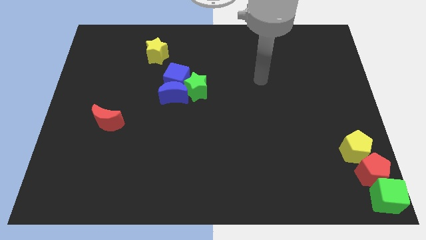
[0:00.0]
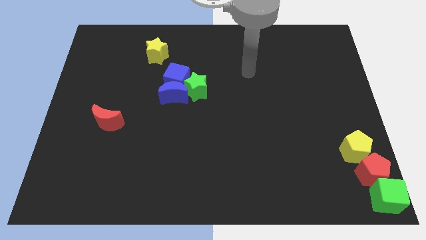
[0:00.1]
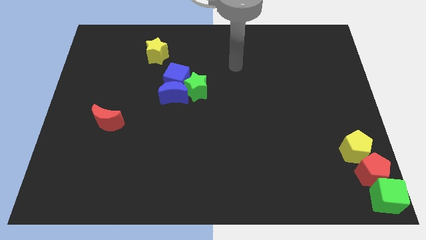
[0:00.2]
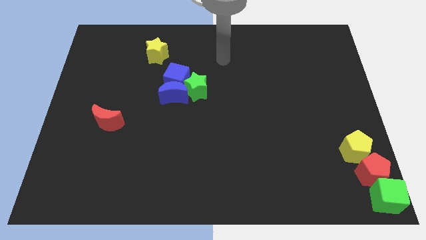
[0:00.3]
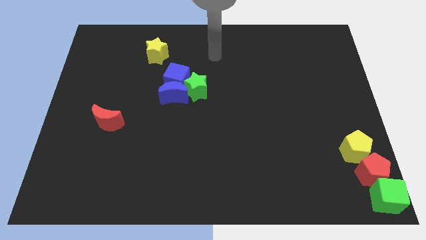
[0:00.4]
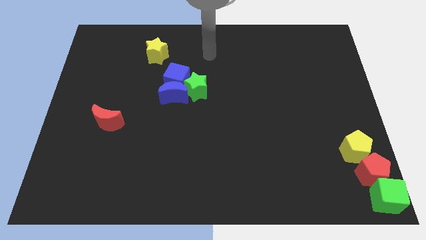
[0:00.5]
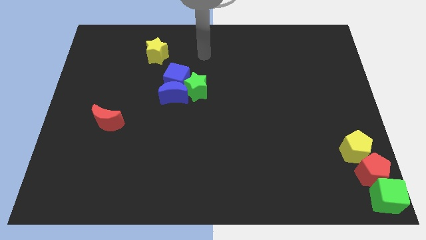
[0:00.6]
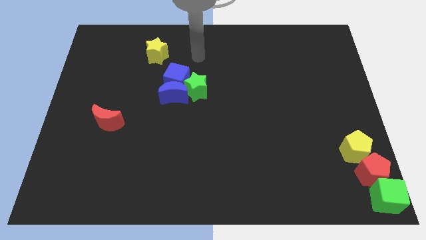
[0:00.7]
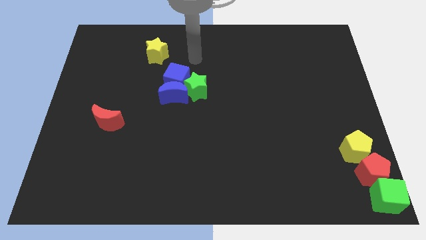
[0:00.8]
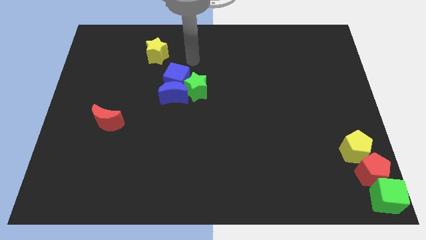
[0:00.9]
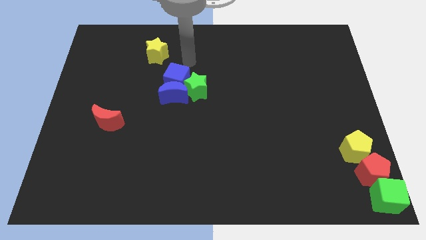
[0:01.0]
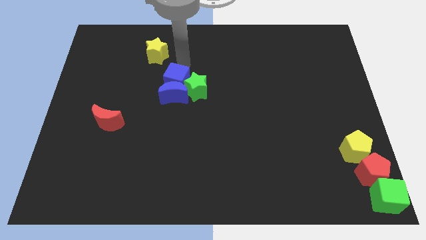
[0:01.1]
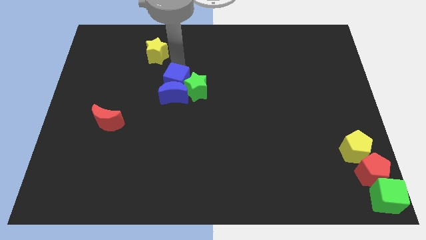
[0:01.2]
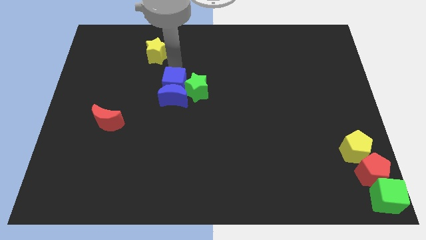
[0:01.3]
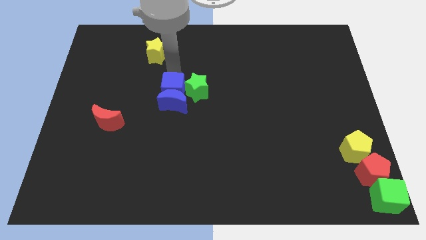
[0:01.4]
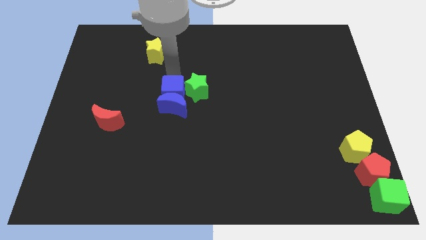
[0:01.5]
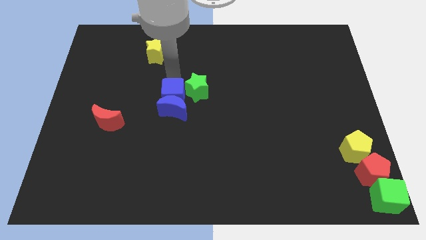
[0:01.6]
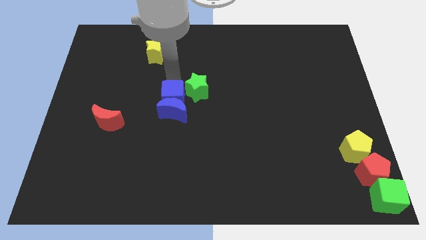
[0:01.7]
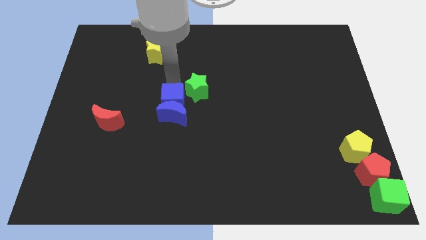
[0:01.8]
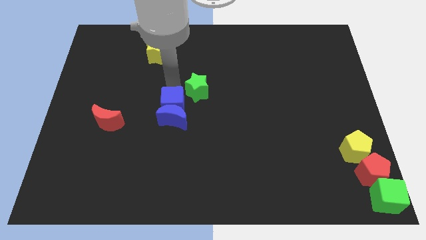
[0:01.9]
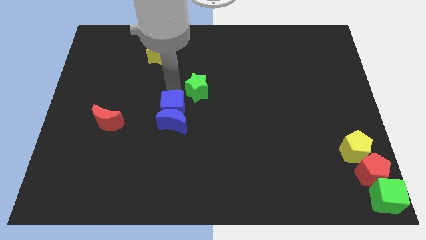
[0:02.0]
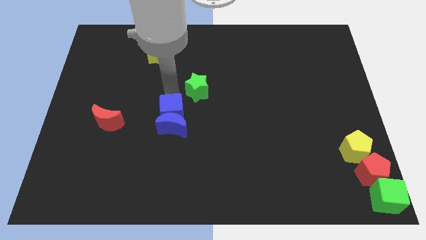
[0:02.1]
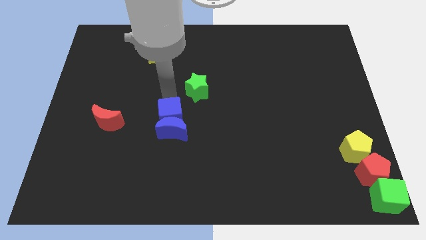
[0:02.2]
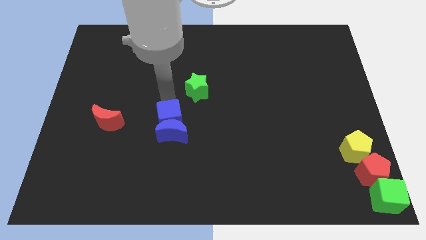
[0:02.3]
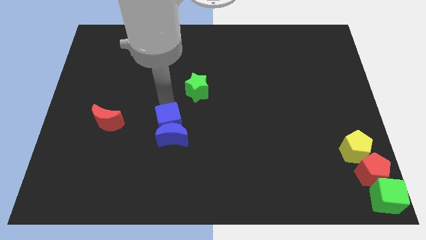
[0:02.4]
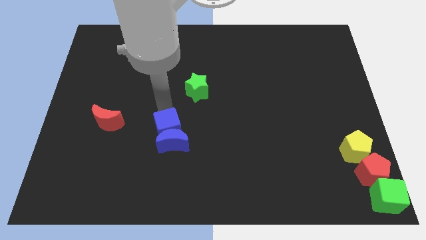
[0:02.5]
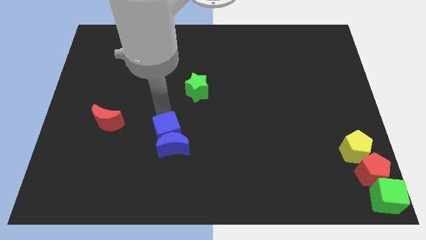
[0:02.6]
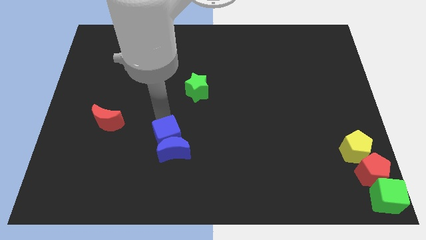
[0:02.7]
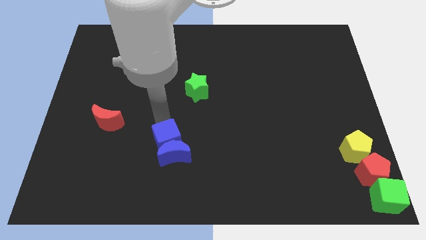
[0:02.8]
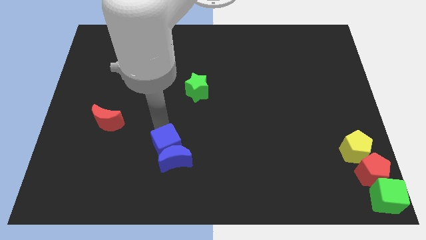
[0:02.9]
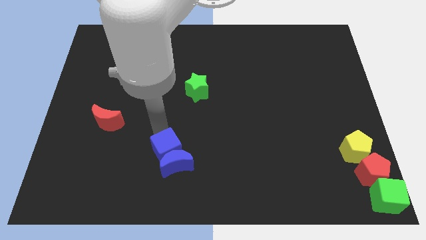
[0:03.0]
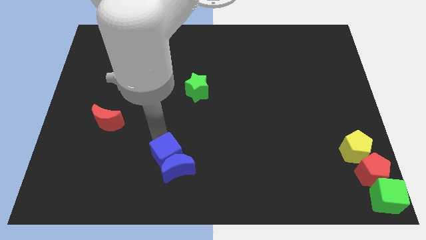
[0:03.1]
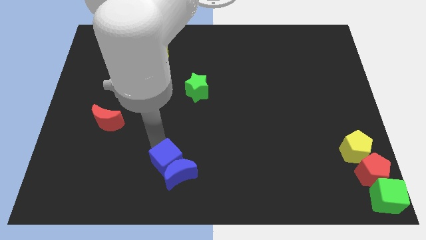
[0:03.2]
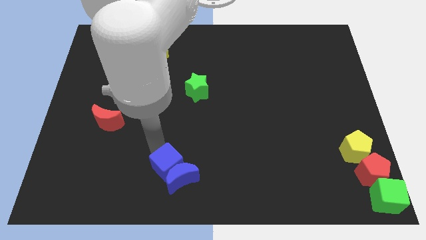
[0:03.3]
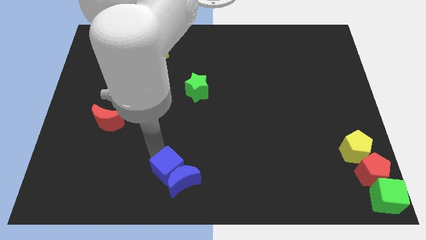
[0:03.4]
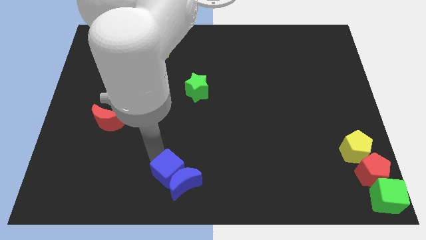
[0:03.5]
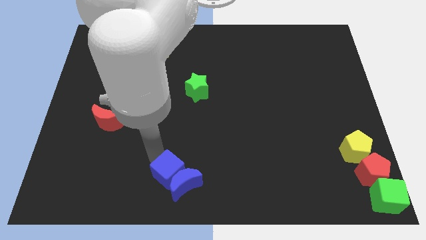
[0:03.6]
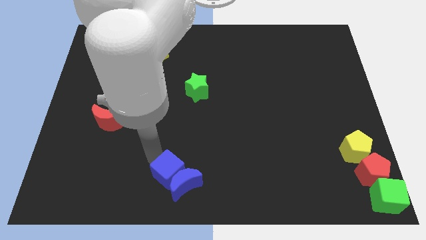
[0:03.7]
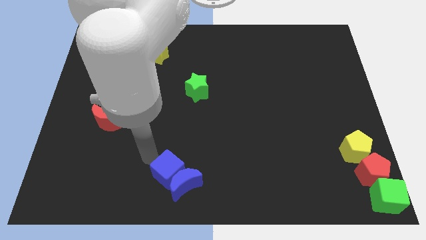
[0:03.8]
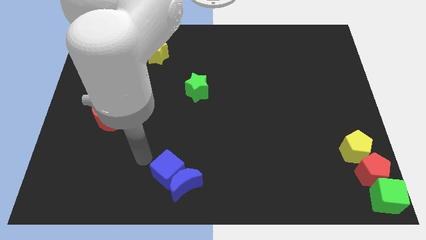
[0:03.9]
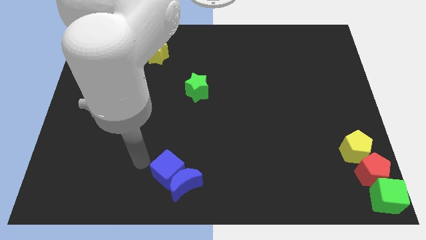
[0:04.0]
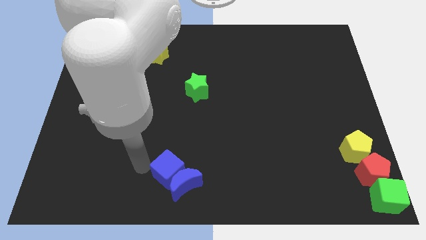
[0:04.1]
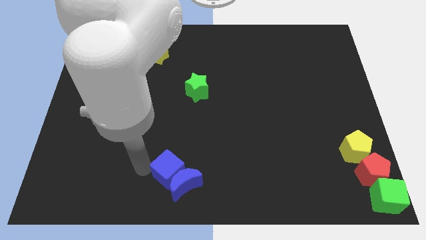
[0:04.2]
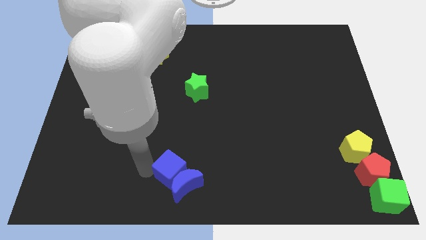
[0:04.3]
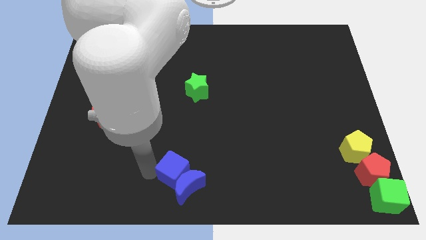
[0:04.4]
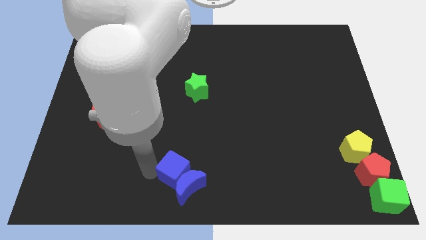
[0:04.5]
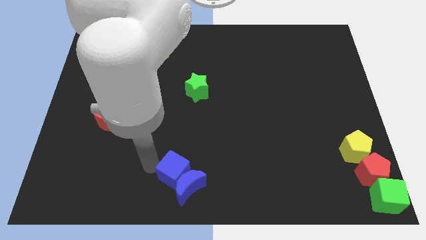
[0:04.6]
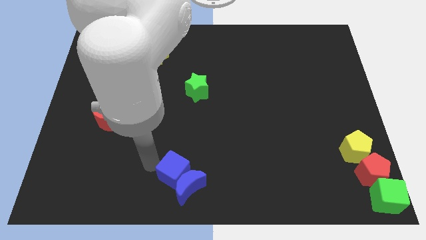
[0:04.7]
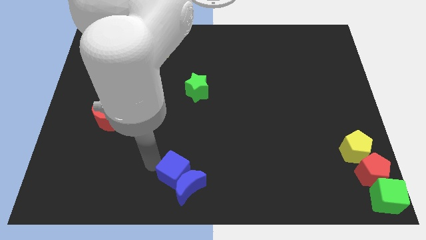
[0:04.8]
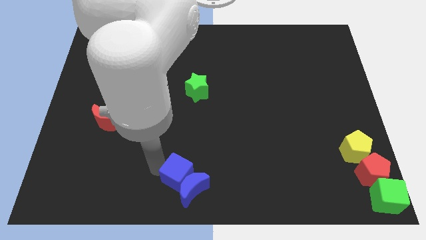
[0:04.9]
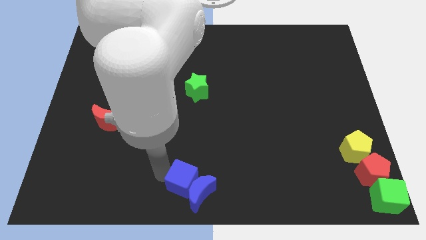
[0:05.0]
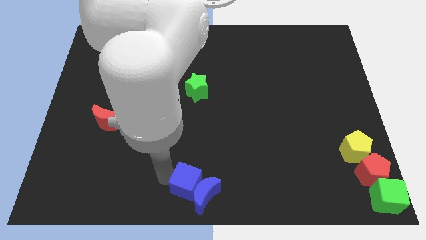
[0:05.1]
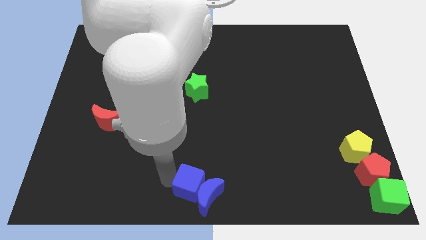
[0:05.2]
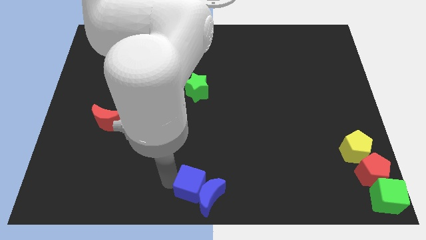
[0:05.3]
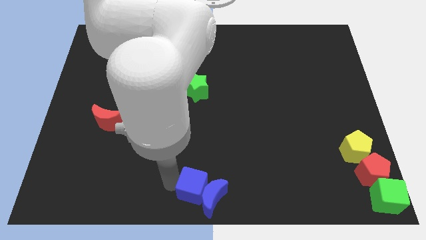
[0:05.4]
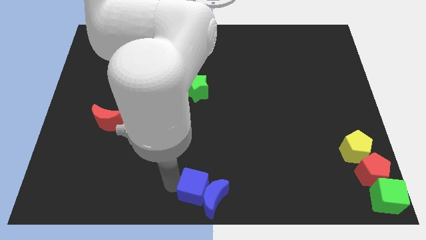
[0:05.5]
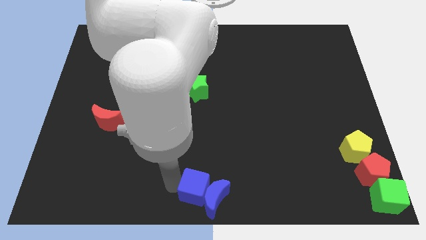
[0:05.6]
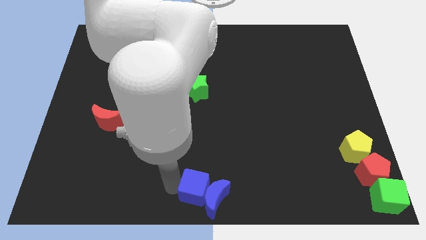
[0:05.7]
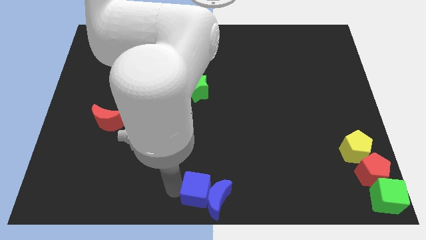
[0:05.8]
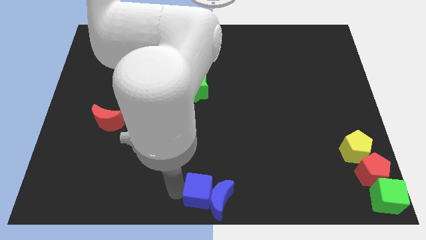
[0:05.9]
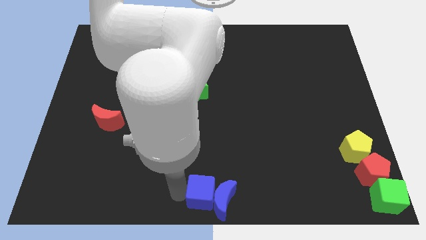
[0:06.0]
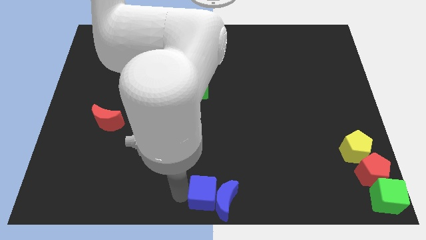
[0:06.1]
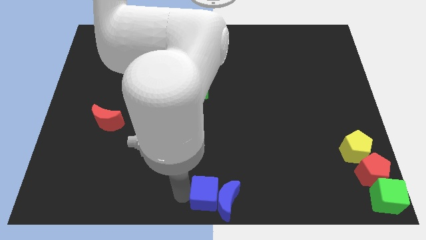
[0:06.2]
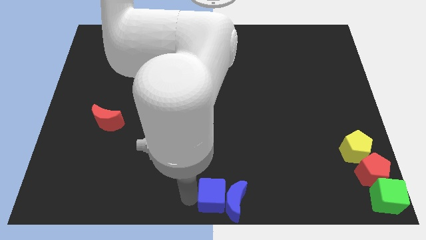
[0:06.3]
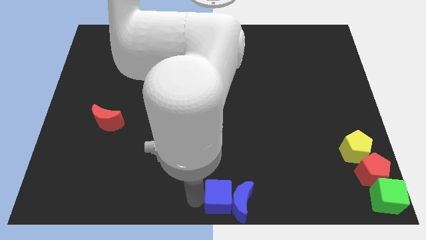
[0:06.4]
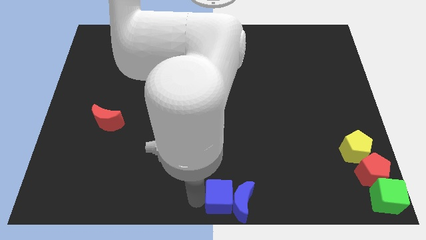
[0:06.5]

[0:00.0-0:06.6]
slide both the blue blocks to the bottom center

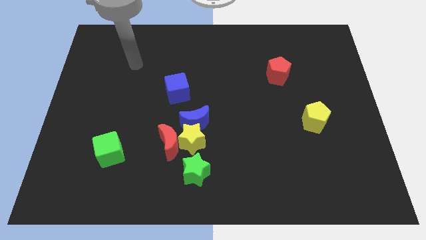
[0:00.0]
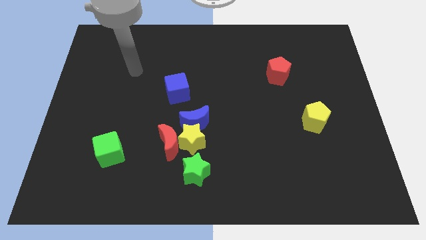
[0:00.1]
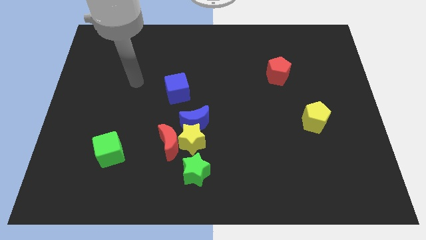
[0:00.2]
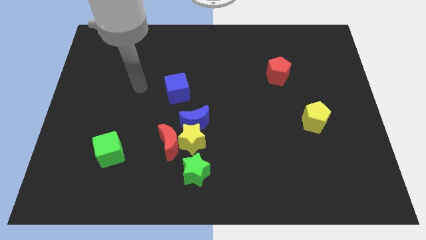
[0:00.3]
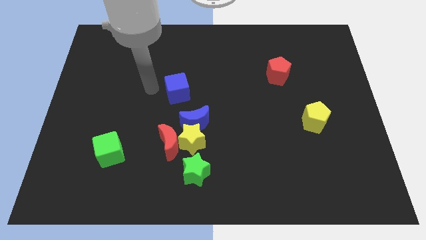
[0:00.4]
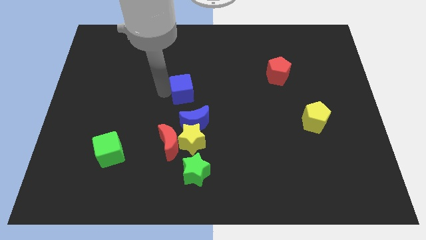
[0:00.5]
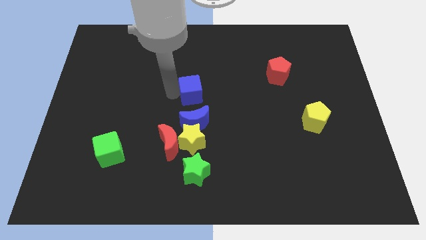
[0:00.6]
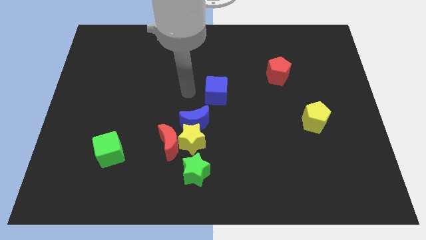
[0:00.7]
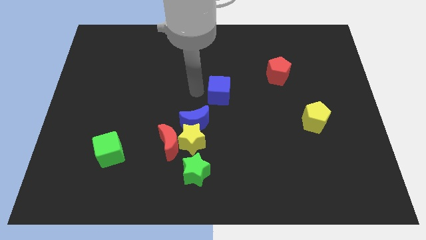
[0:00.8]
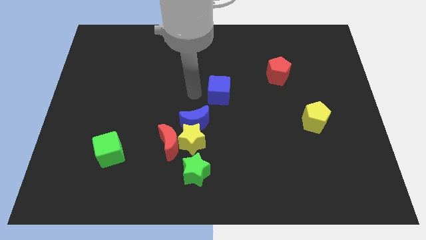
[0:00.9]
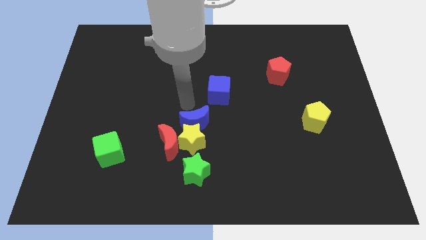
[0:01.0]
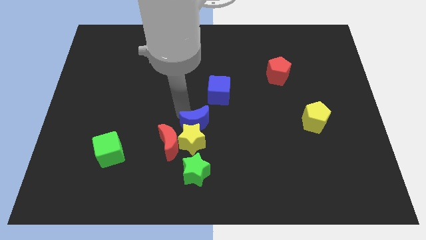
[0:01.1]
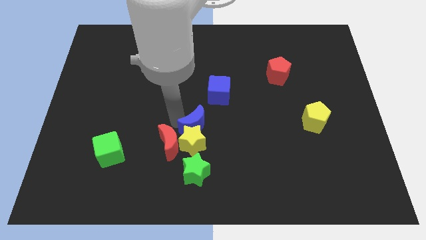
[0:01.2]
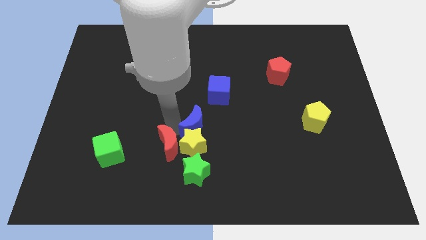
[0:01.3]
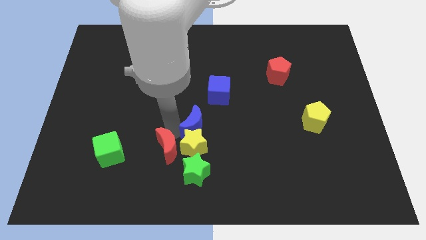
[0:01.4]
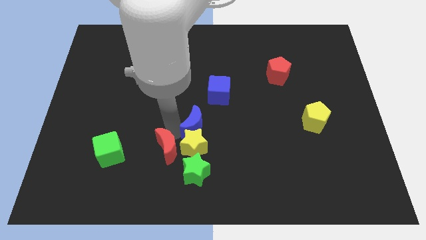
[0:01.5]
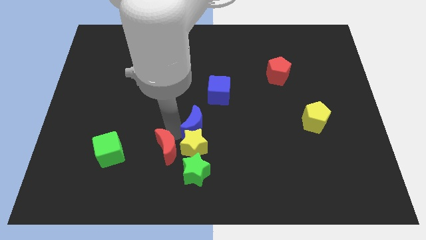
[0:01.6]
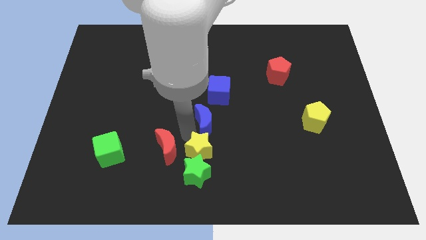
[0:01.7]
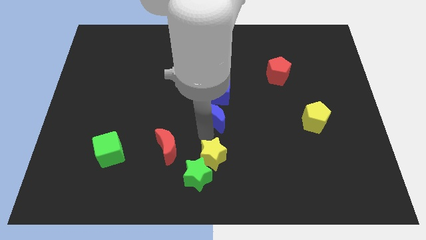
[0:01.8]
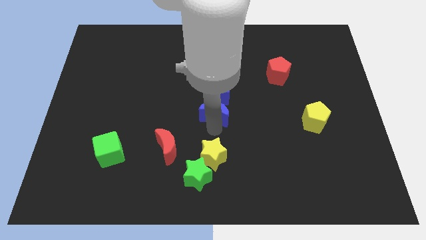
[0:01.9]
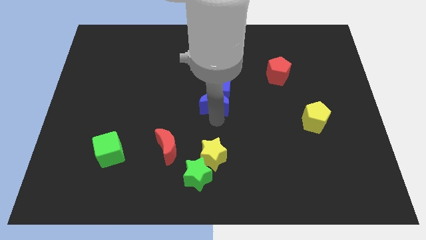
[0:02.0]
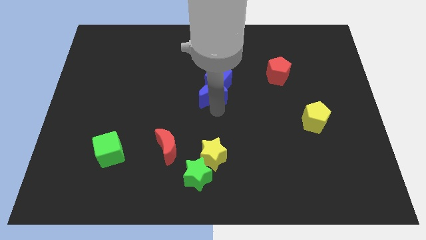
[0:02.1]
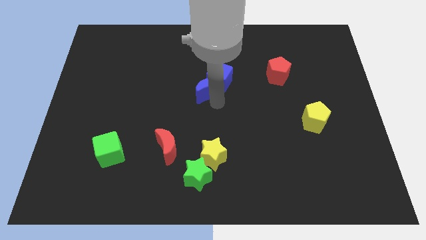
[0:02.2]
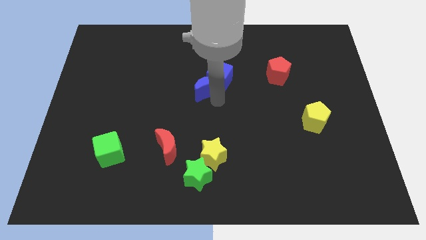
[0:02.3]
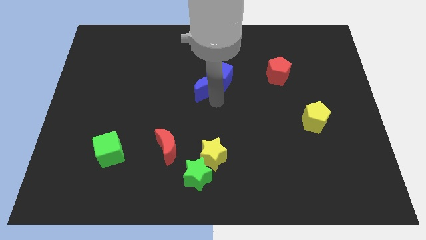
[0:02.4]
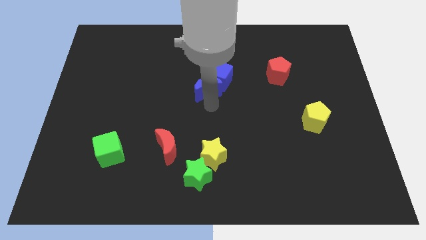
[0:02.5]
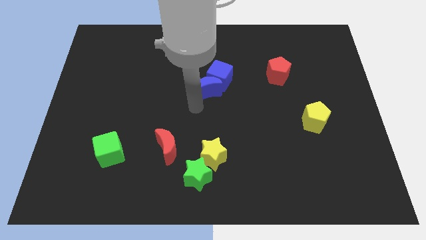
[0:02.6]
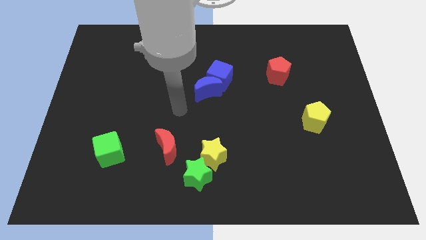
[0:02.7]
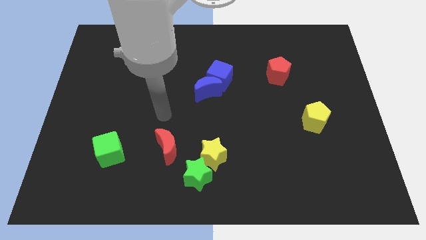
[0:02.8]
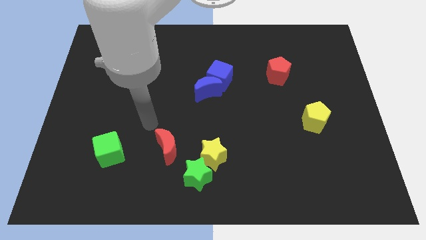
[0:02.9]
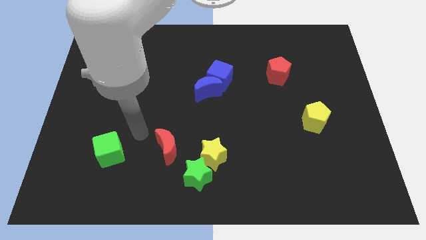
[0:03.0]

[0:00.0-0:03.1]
push the blue crescent into the blue cube
